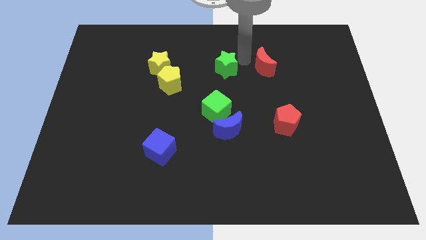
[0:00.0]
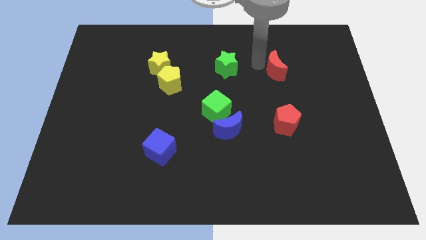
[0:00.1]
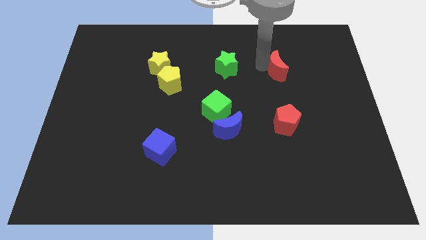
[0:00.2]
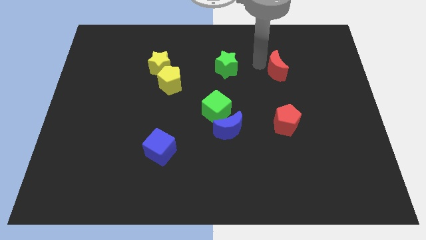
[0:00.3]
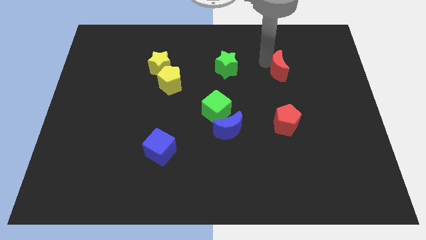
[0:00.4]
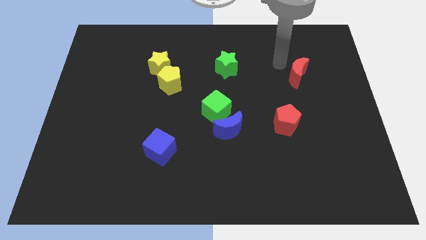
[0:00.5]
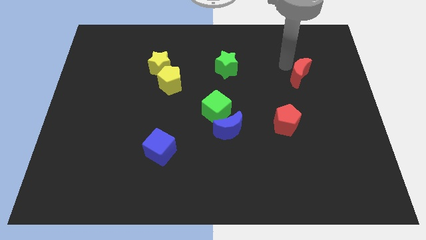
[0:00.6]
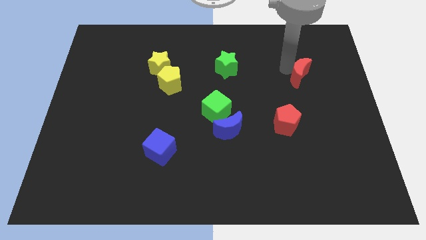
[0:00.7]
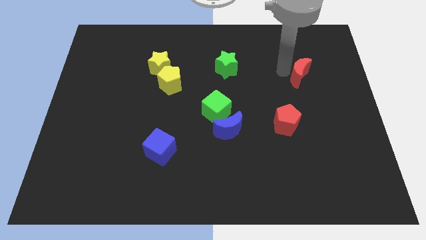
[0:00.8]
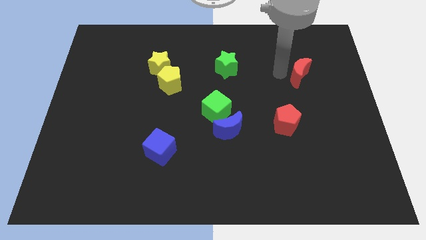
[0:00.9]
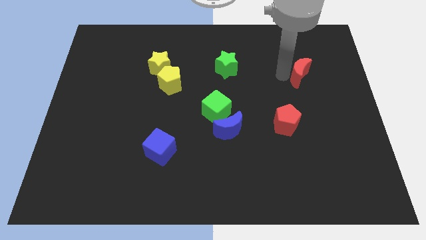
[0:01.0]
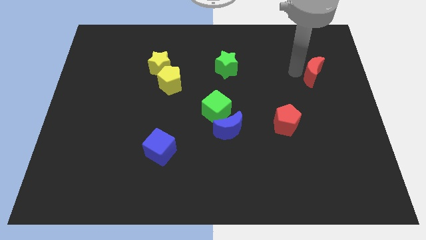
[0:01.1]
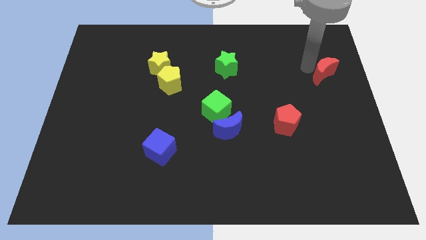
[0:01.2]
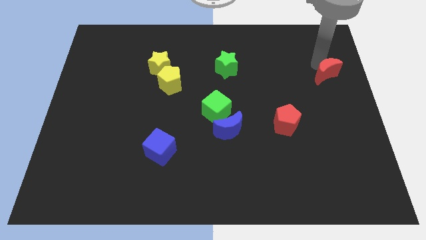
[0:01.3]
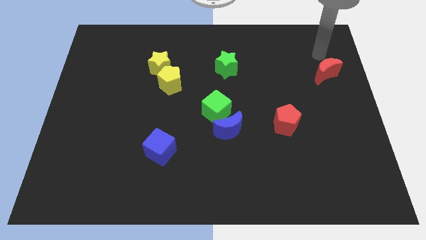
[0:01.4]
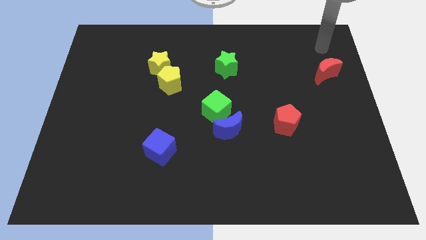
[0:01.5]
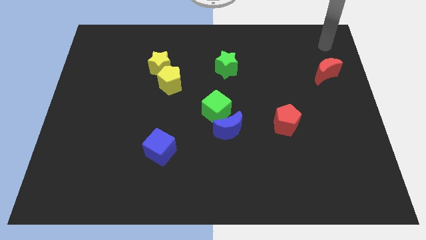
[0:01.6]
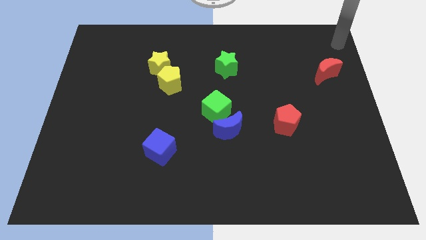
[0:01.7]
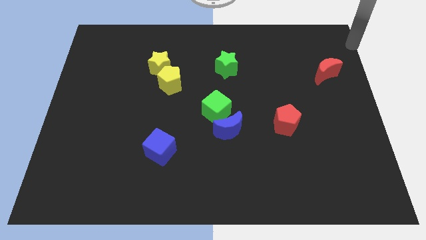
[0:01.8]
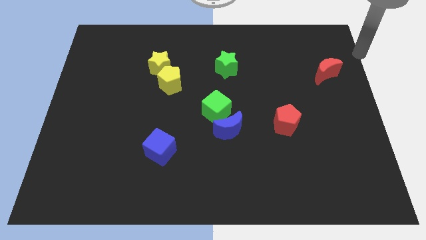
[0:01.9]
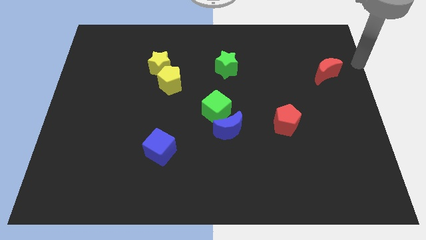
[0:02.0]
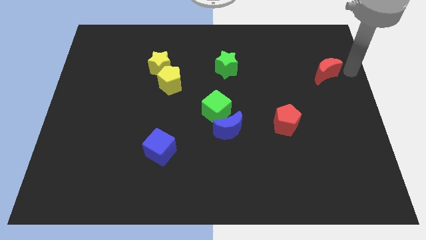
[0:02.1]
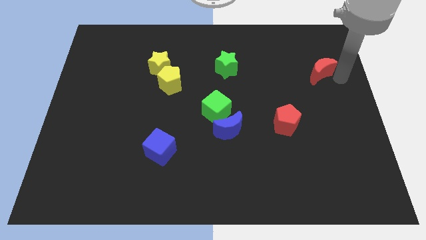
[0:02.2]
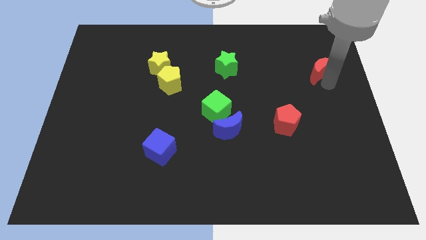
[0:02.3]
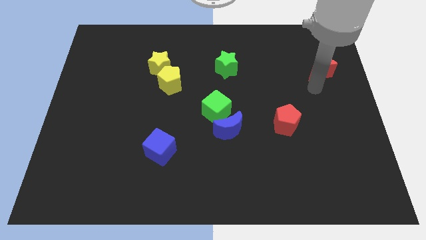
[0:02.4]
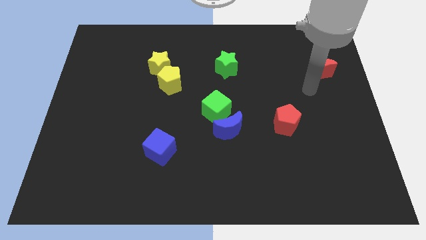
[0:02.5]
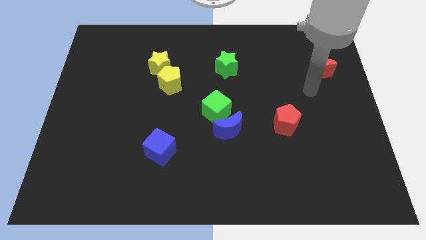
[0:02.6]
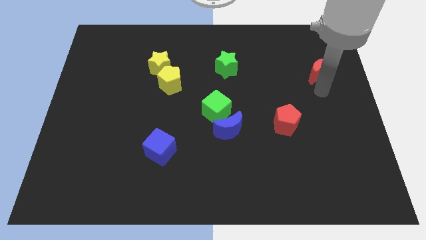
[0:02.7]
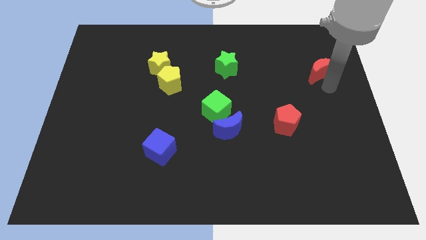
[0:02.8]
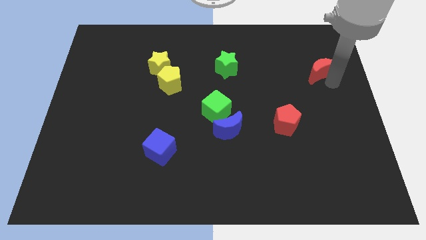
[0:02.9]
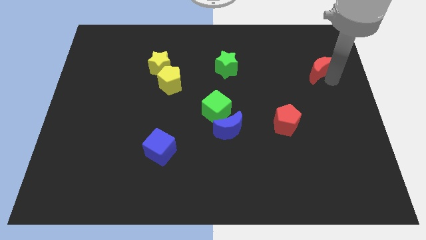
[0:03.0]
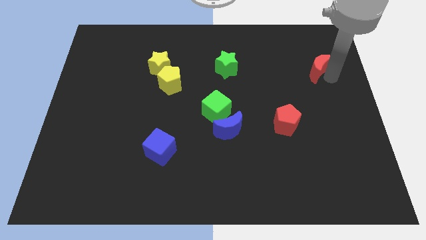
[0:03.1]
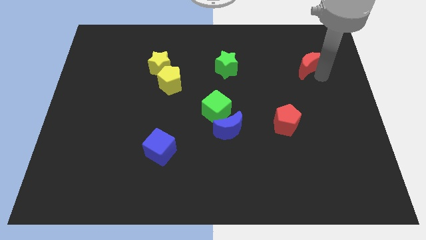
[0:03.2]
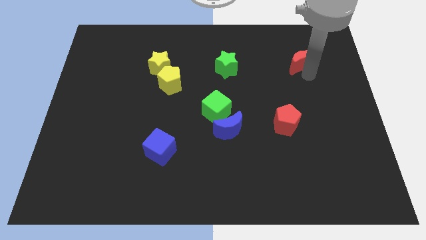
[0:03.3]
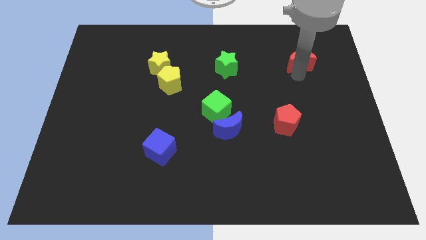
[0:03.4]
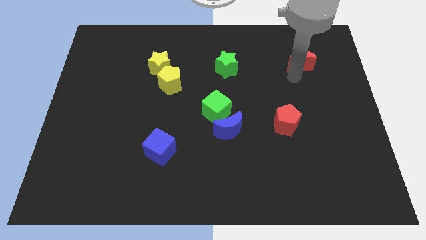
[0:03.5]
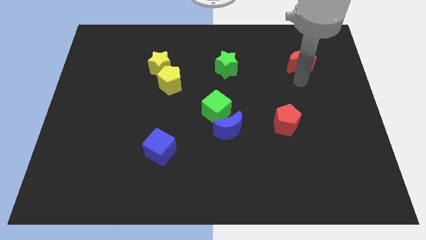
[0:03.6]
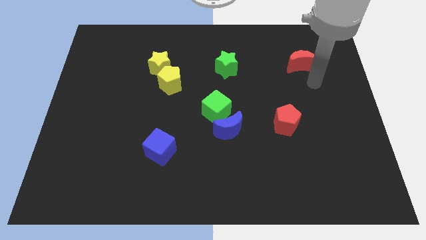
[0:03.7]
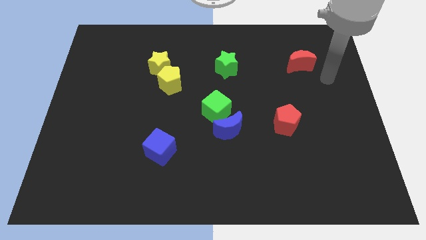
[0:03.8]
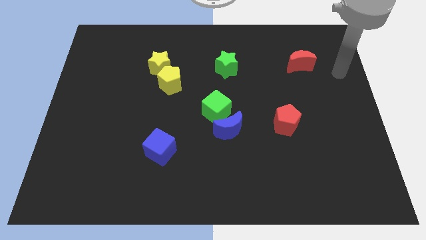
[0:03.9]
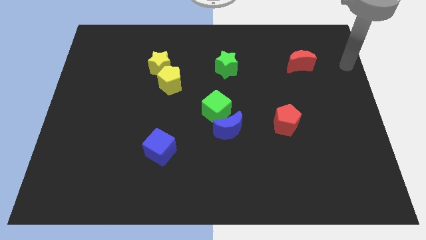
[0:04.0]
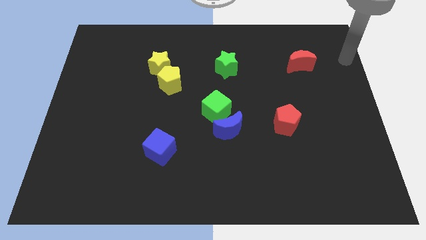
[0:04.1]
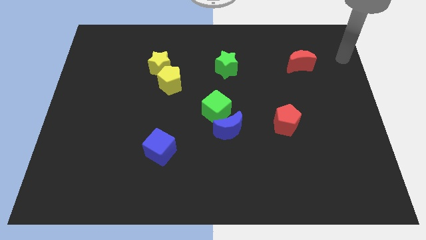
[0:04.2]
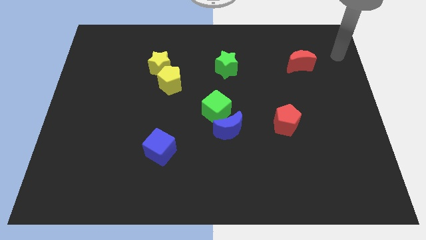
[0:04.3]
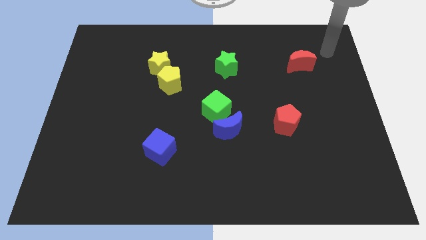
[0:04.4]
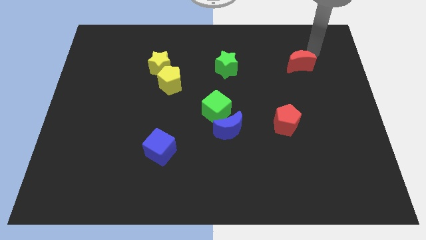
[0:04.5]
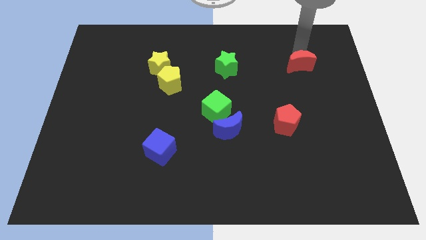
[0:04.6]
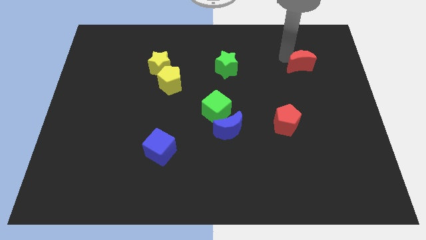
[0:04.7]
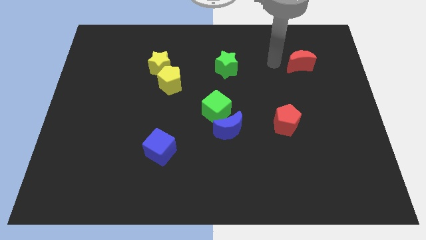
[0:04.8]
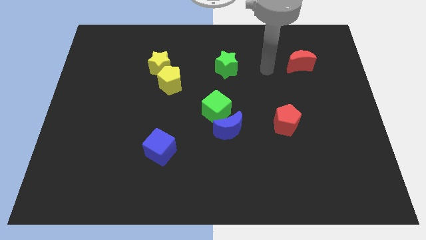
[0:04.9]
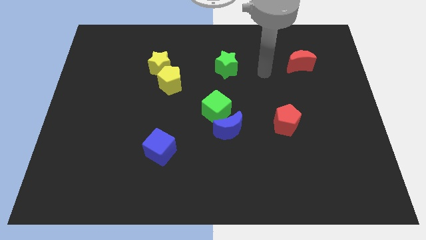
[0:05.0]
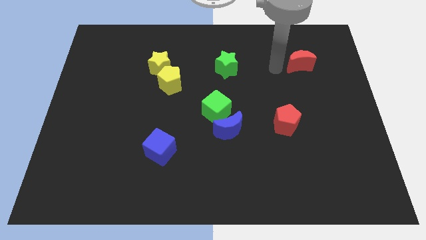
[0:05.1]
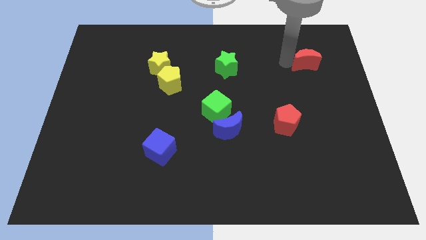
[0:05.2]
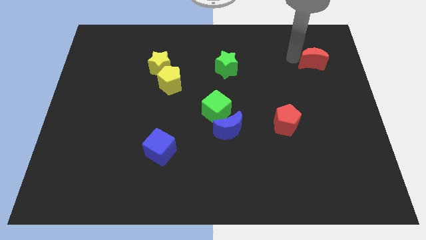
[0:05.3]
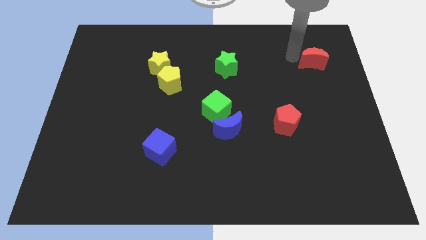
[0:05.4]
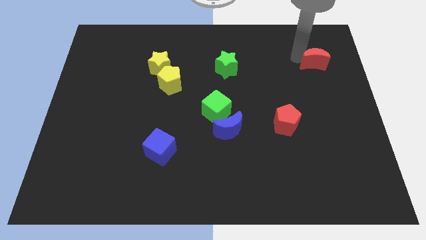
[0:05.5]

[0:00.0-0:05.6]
move the red moon to the top right corner side of the board

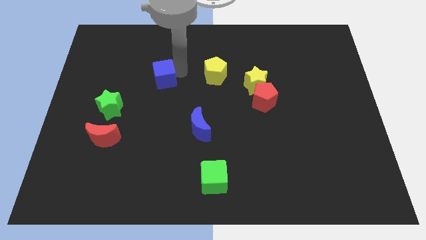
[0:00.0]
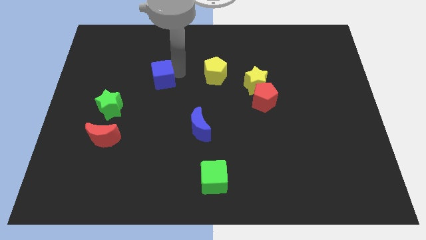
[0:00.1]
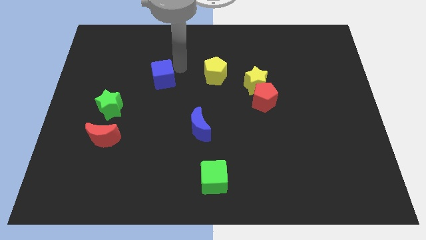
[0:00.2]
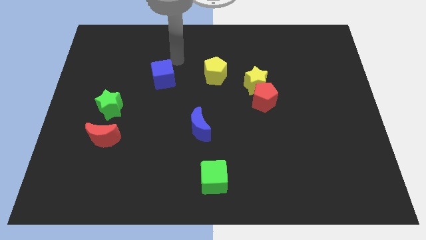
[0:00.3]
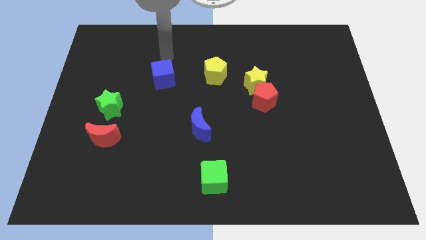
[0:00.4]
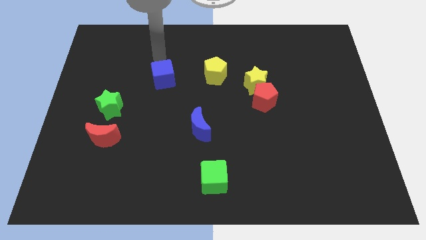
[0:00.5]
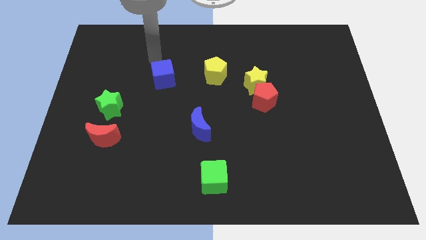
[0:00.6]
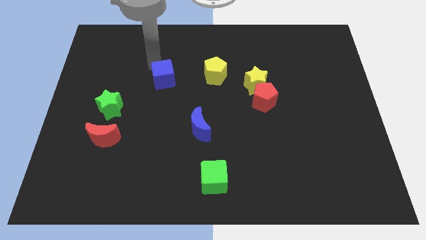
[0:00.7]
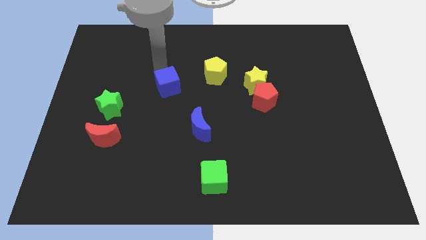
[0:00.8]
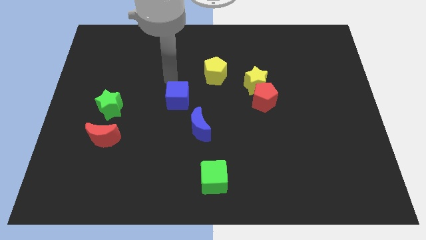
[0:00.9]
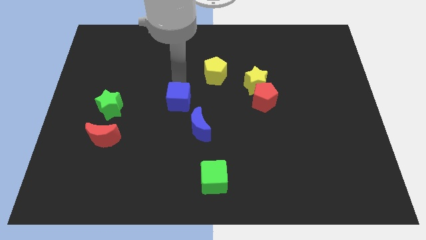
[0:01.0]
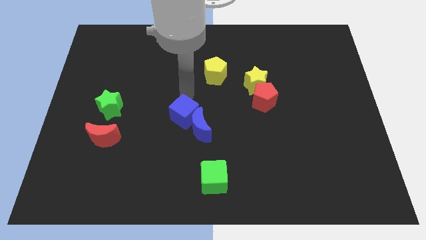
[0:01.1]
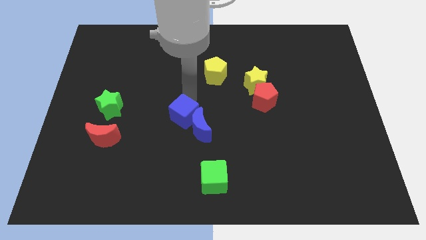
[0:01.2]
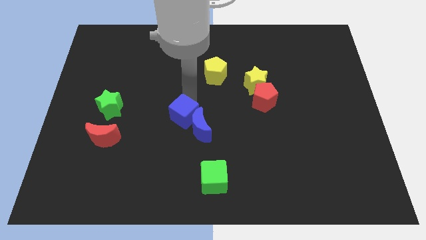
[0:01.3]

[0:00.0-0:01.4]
move the blue cube into the blue cube into the blue crescent

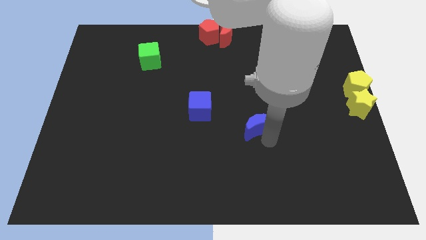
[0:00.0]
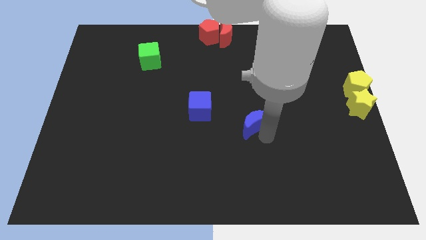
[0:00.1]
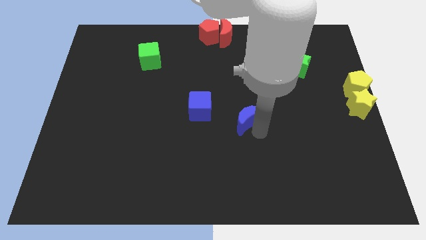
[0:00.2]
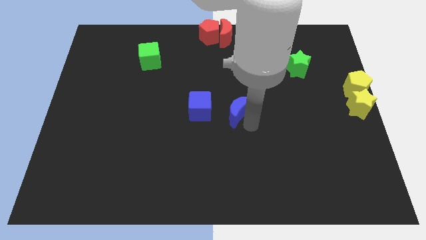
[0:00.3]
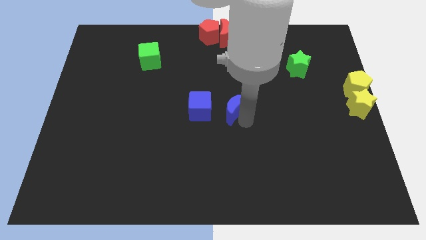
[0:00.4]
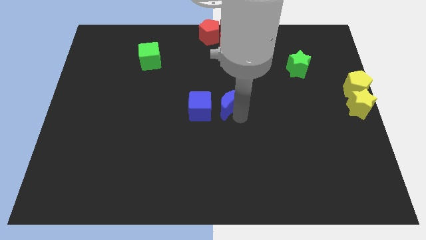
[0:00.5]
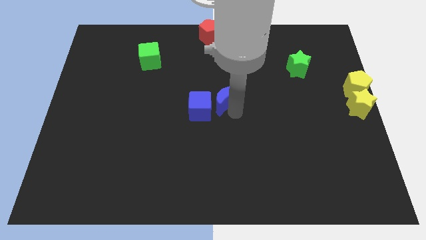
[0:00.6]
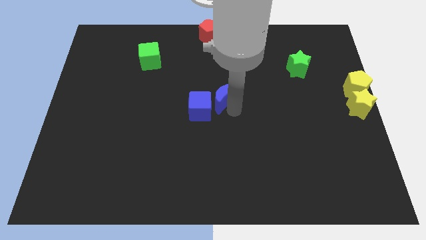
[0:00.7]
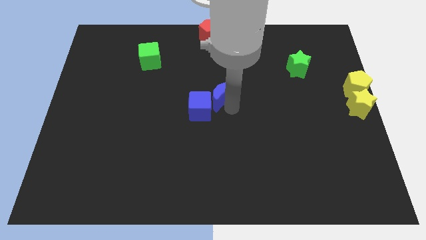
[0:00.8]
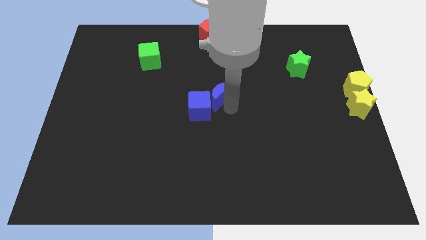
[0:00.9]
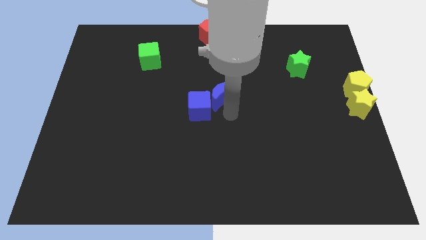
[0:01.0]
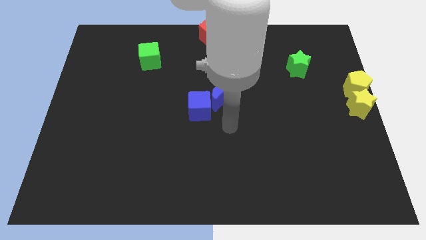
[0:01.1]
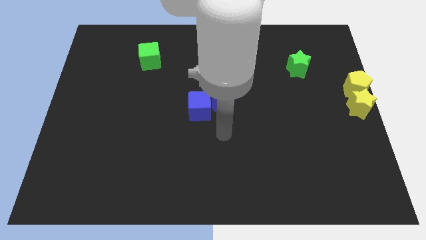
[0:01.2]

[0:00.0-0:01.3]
put the blue crescent on the right side of the blue cube

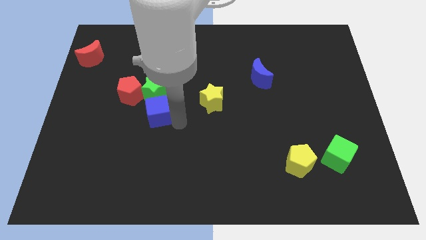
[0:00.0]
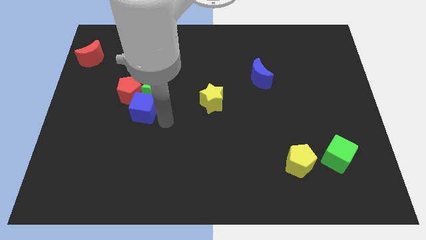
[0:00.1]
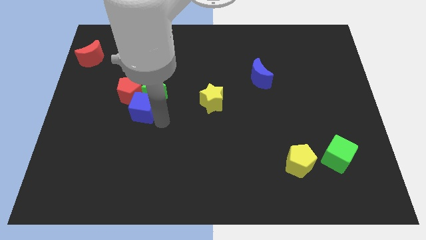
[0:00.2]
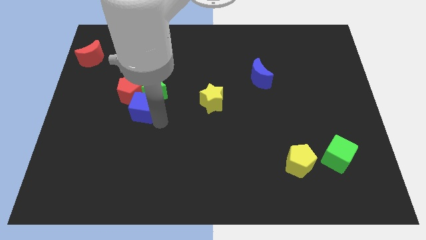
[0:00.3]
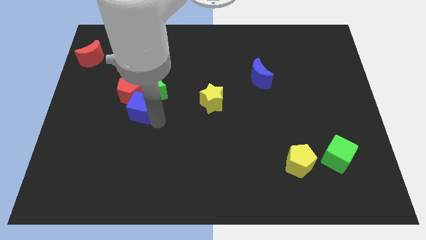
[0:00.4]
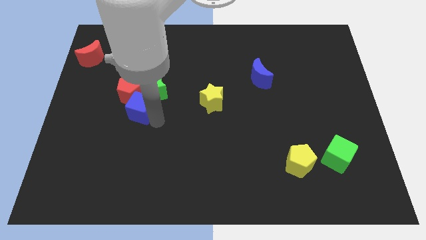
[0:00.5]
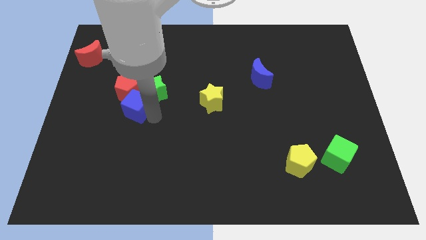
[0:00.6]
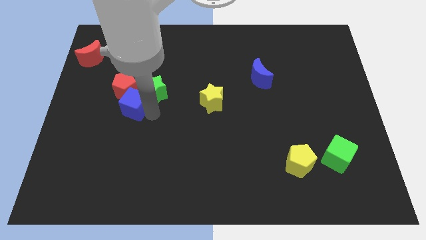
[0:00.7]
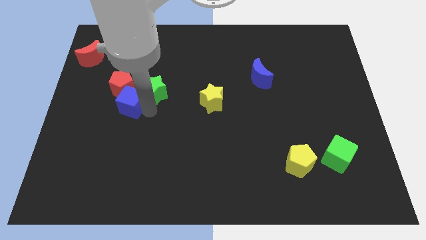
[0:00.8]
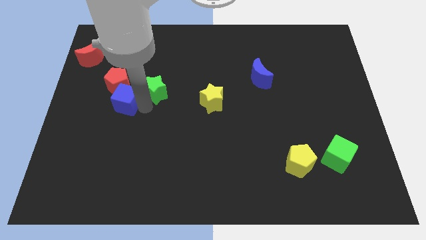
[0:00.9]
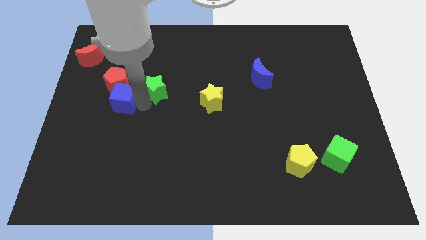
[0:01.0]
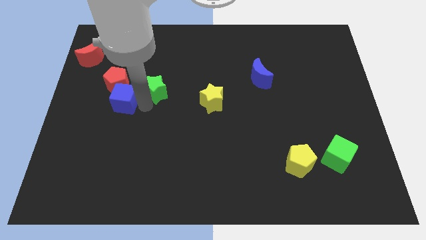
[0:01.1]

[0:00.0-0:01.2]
move blue cube into red pentagon
